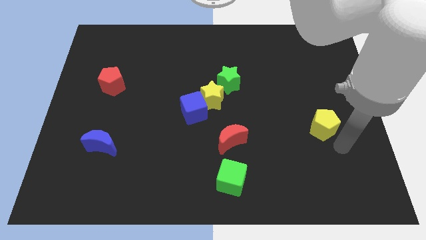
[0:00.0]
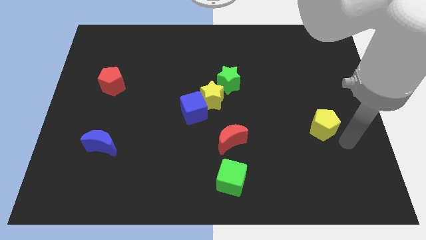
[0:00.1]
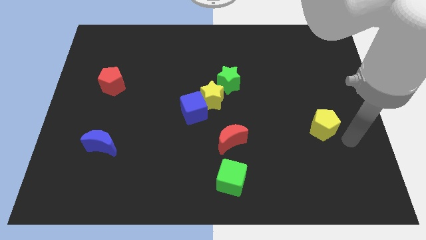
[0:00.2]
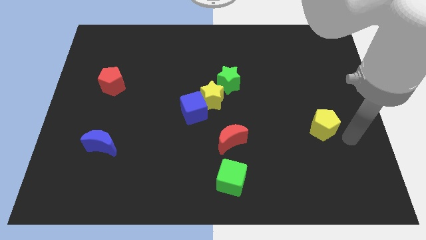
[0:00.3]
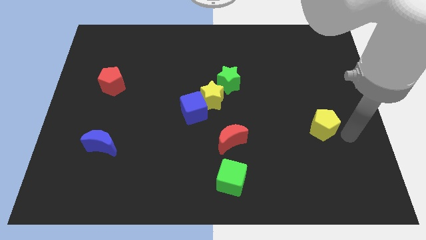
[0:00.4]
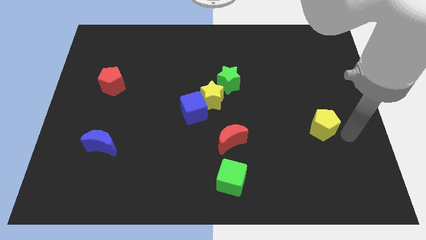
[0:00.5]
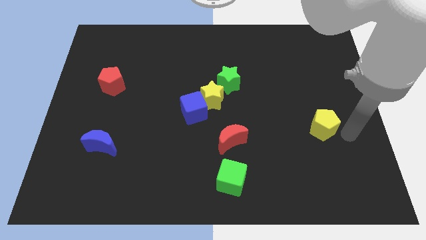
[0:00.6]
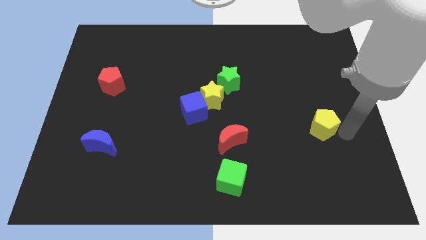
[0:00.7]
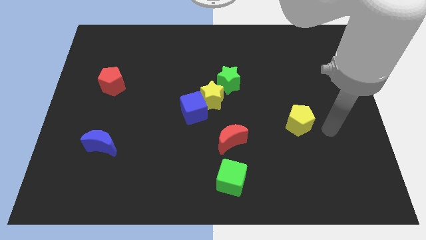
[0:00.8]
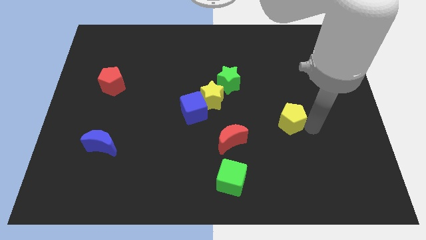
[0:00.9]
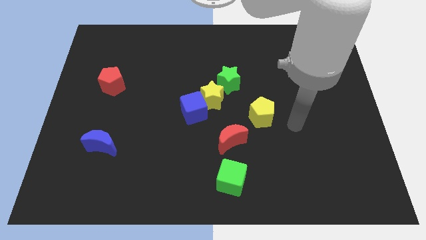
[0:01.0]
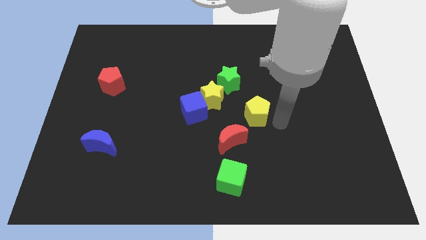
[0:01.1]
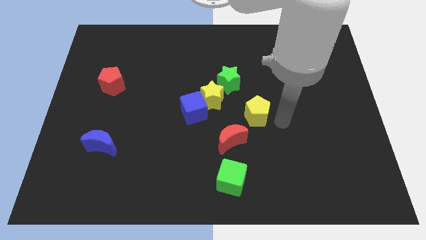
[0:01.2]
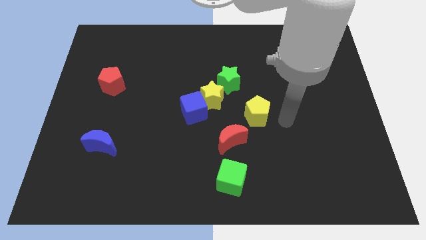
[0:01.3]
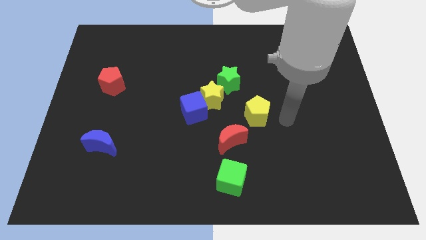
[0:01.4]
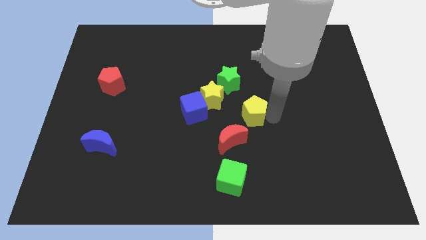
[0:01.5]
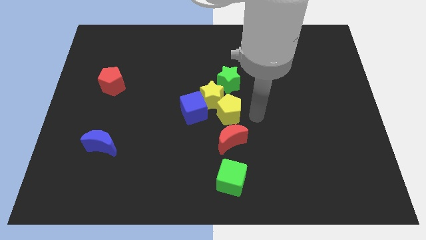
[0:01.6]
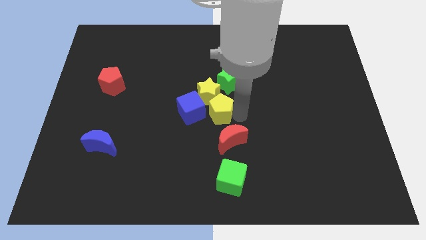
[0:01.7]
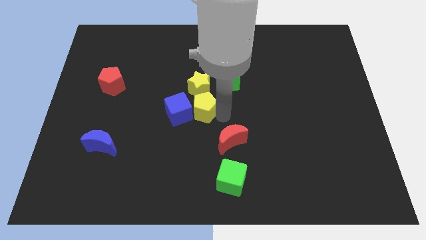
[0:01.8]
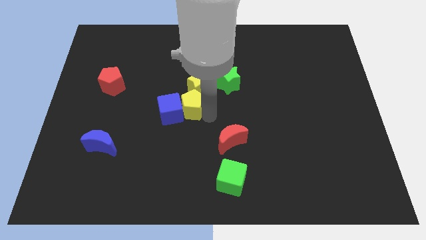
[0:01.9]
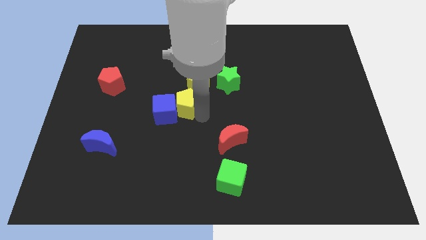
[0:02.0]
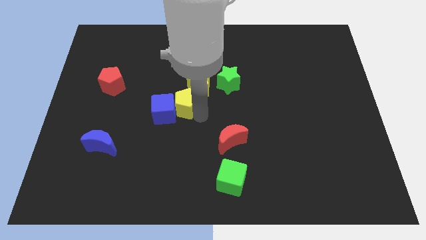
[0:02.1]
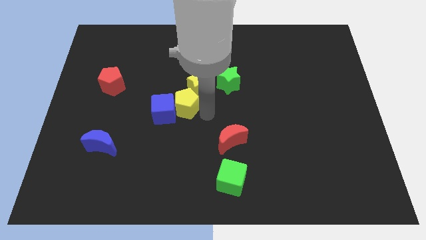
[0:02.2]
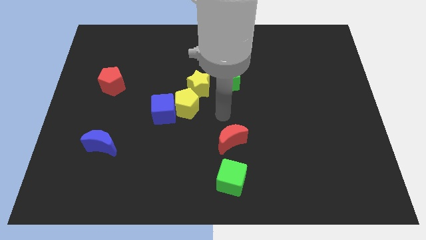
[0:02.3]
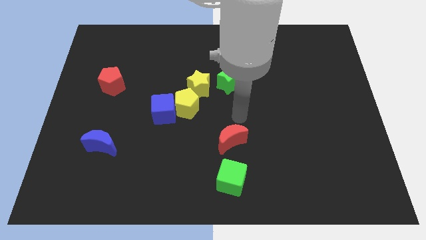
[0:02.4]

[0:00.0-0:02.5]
push the yellow pentagon to the center of the board

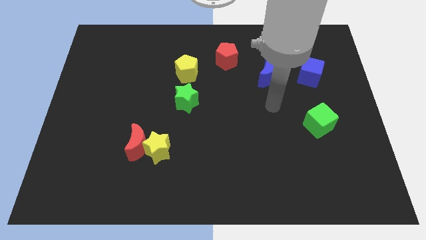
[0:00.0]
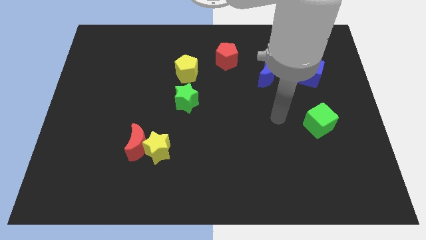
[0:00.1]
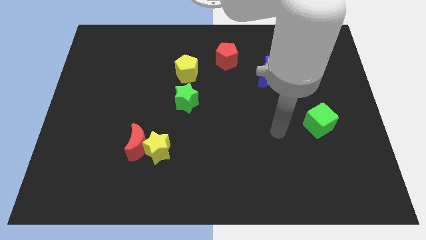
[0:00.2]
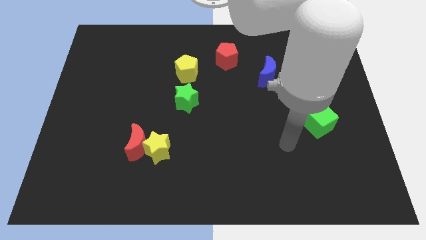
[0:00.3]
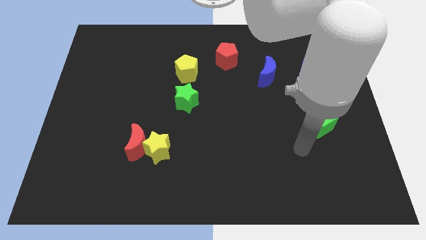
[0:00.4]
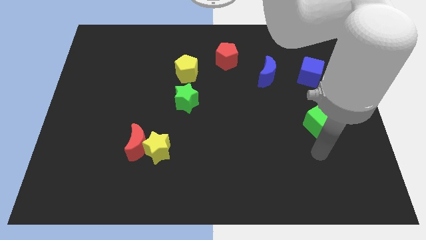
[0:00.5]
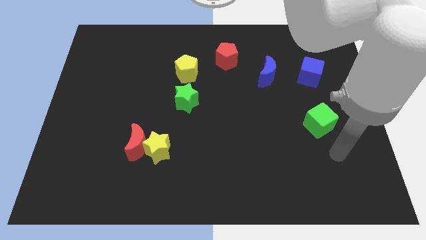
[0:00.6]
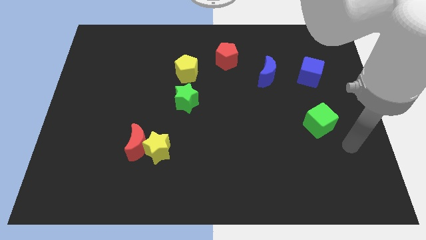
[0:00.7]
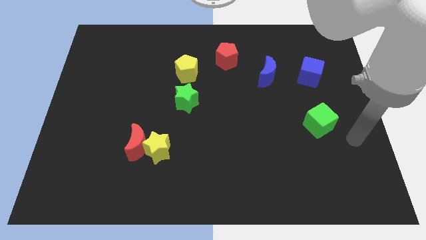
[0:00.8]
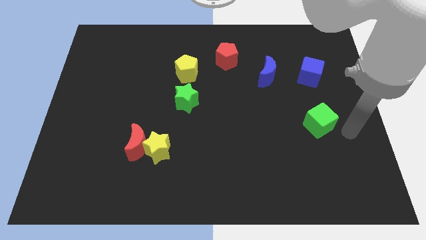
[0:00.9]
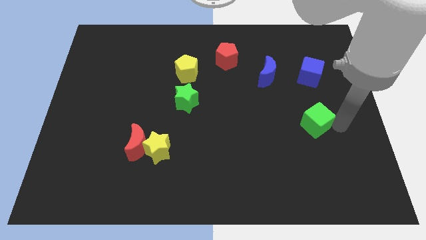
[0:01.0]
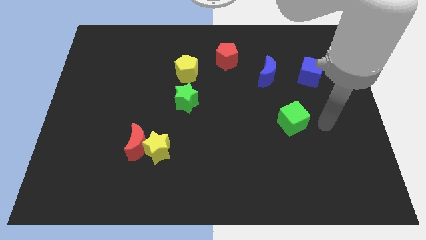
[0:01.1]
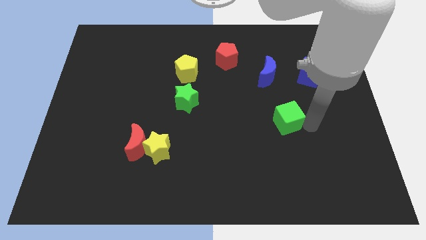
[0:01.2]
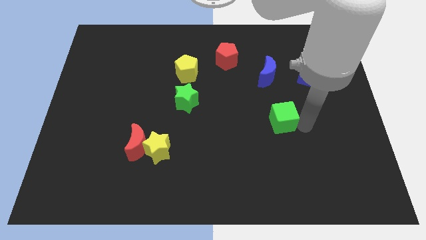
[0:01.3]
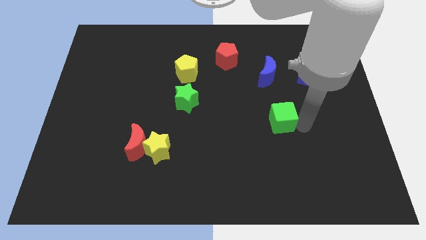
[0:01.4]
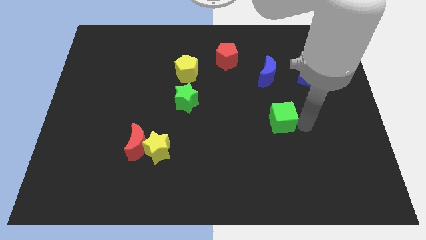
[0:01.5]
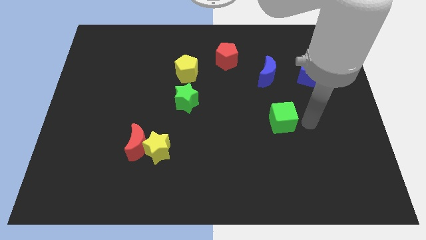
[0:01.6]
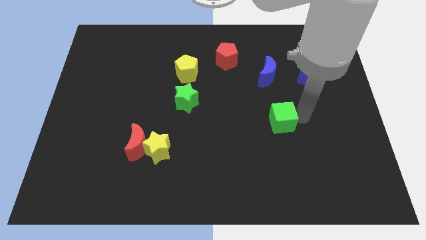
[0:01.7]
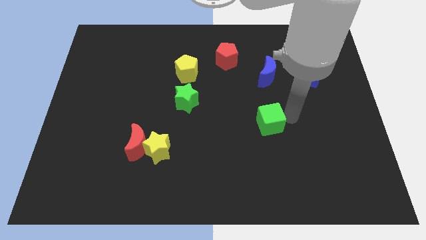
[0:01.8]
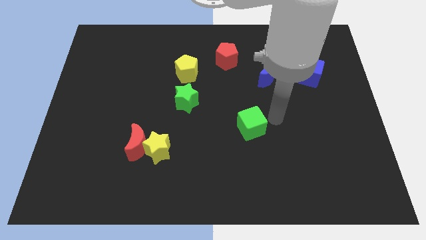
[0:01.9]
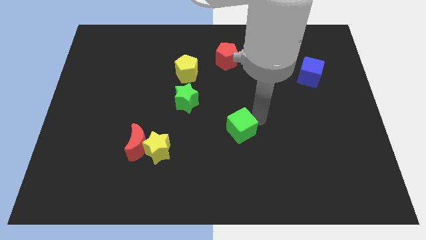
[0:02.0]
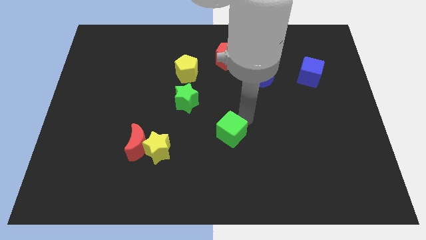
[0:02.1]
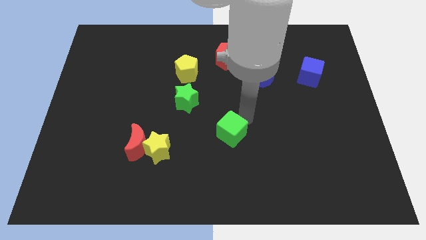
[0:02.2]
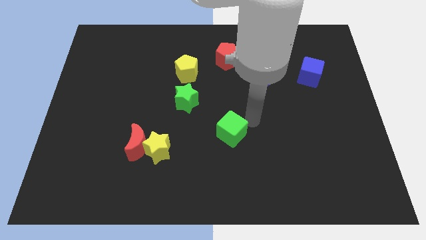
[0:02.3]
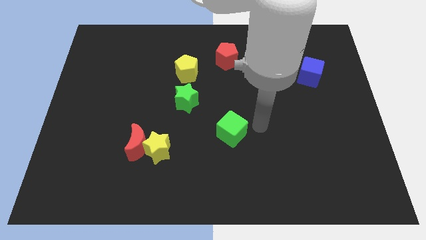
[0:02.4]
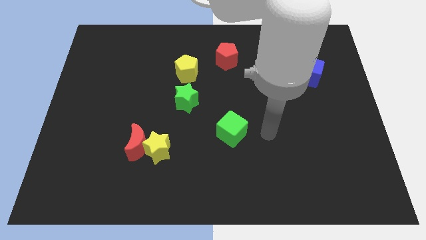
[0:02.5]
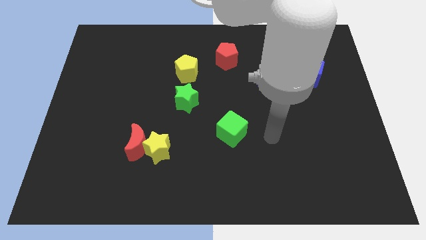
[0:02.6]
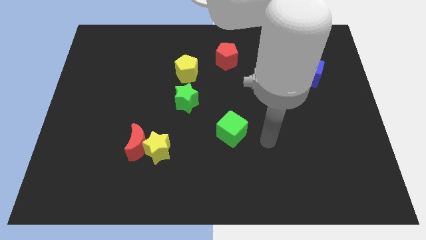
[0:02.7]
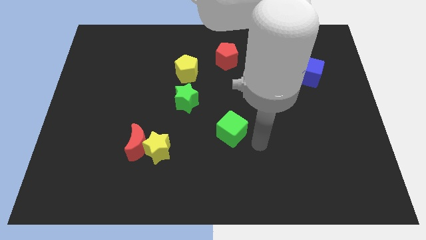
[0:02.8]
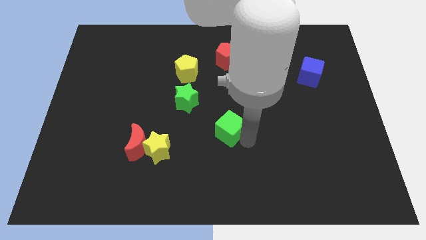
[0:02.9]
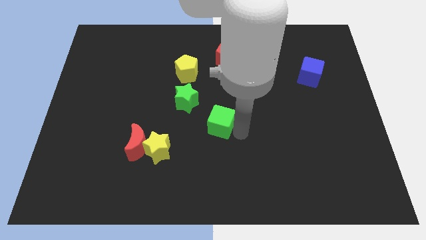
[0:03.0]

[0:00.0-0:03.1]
slide green cube towards yellow star

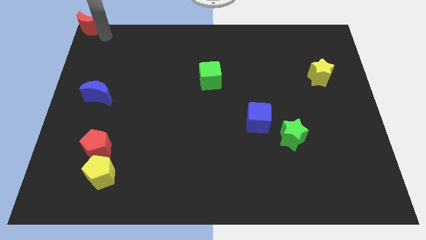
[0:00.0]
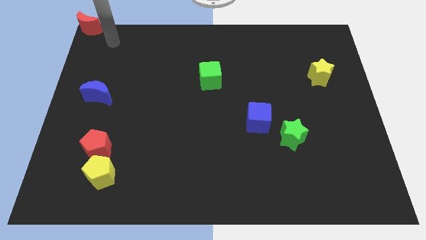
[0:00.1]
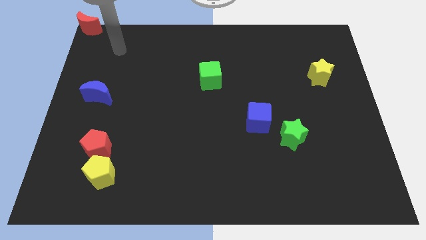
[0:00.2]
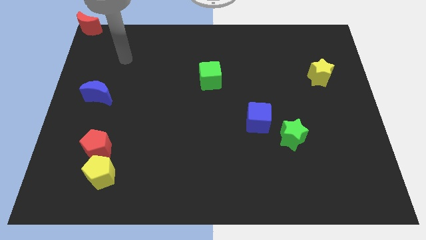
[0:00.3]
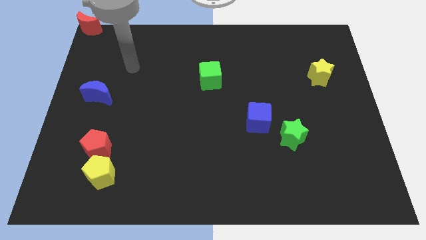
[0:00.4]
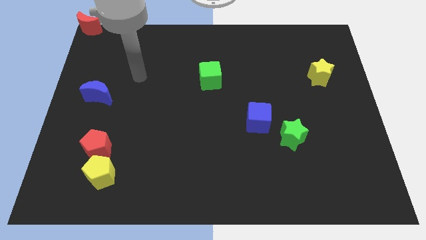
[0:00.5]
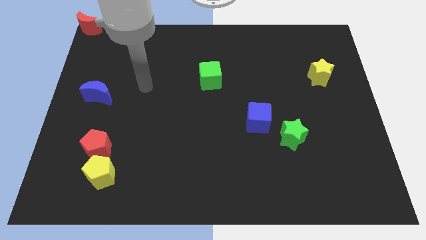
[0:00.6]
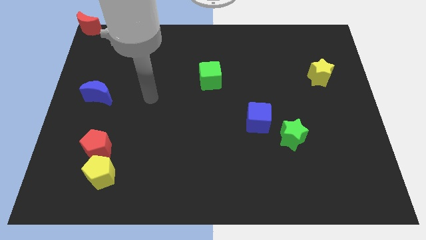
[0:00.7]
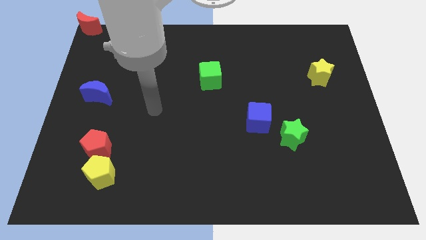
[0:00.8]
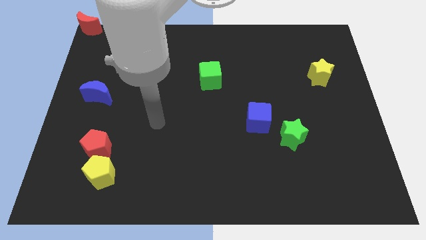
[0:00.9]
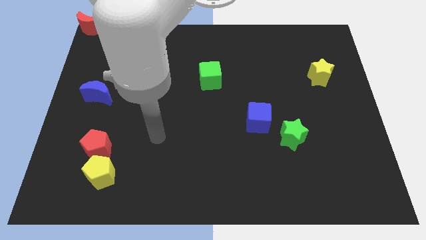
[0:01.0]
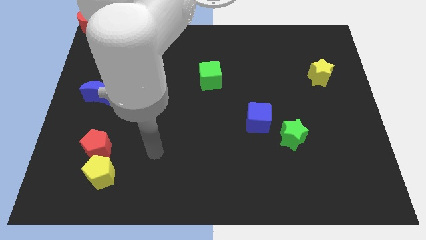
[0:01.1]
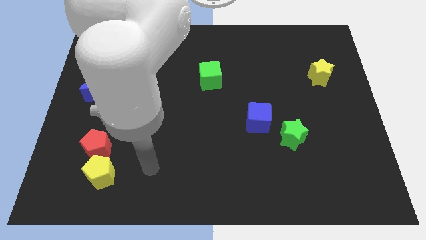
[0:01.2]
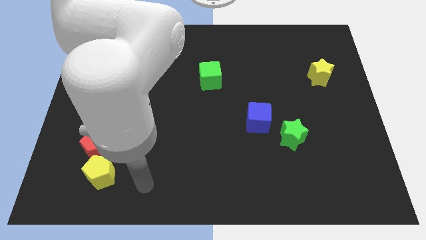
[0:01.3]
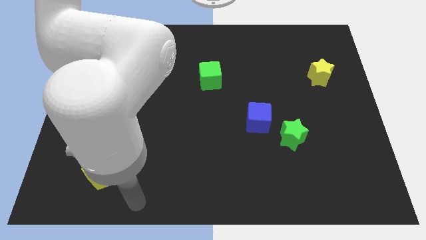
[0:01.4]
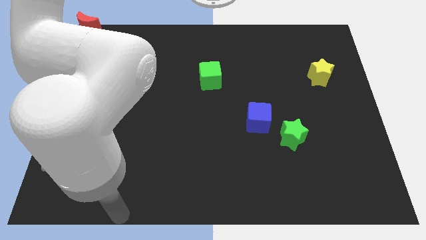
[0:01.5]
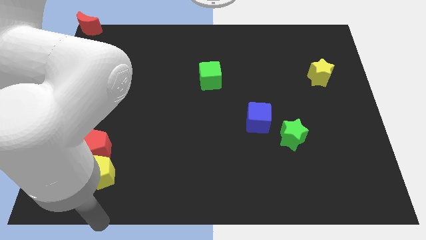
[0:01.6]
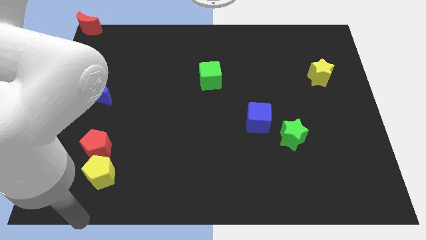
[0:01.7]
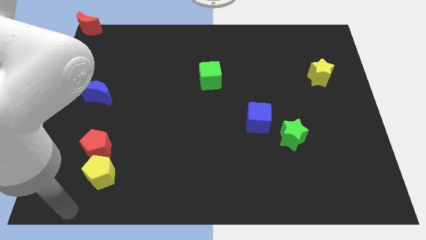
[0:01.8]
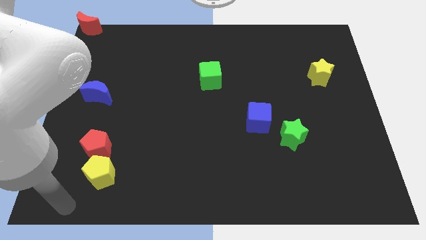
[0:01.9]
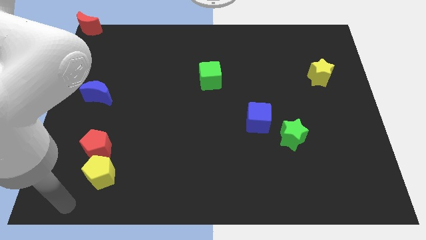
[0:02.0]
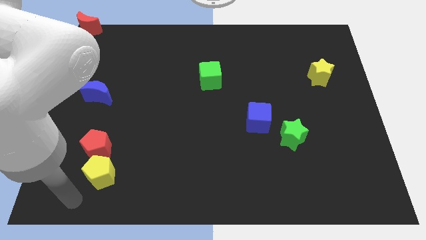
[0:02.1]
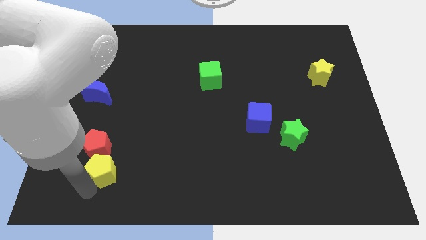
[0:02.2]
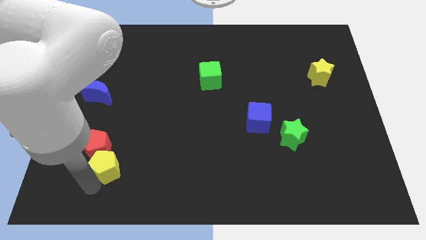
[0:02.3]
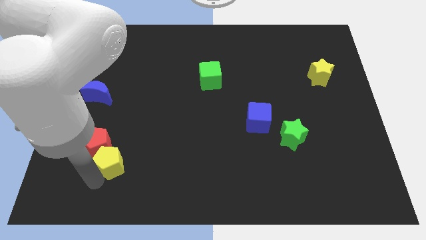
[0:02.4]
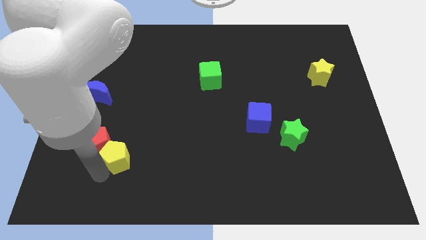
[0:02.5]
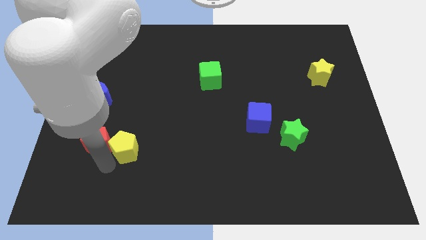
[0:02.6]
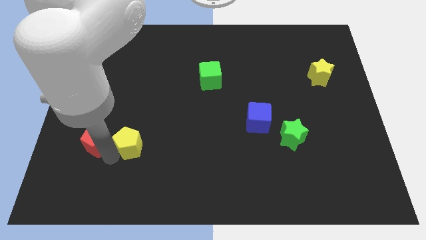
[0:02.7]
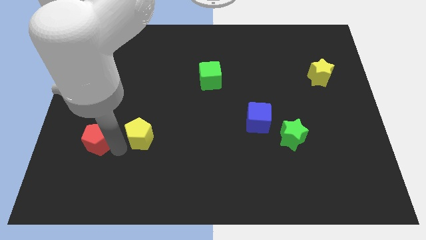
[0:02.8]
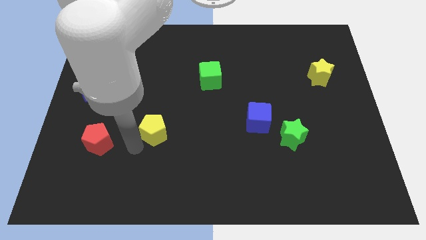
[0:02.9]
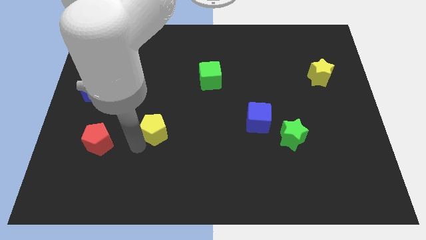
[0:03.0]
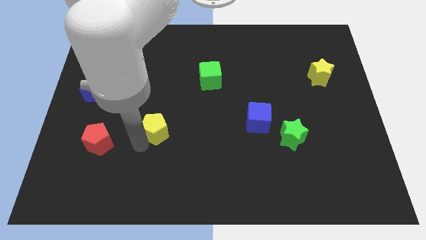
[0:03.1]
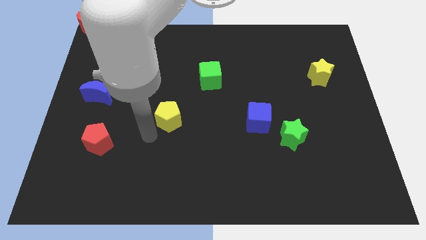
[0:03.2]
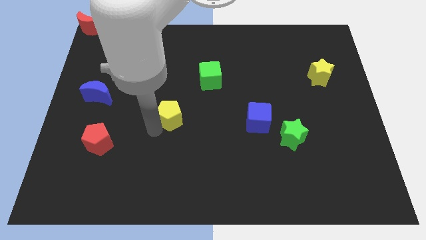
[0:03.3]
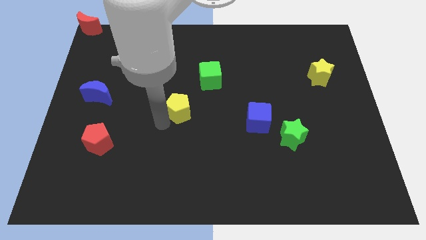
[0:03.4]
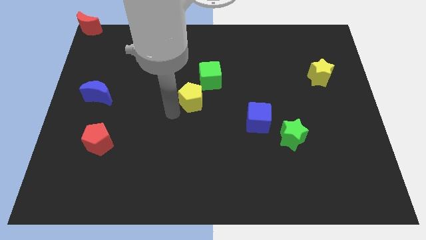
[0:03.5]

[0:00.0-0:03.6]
push the yellow pentagon to the bottom left of the green cube
